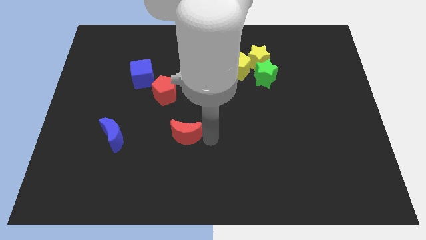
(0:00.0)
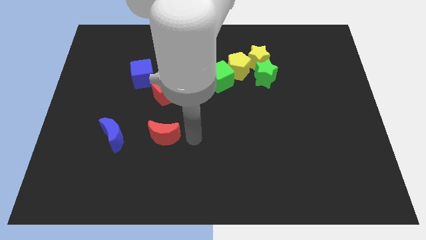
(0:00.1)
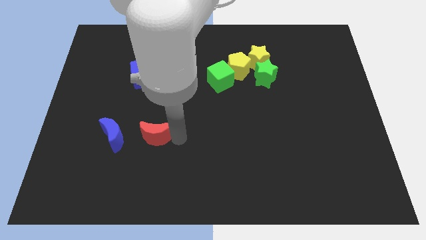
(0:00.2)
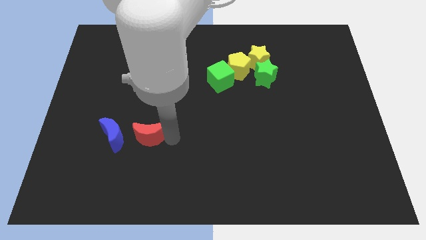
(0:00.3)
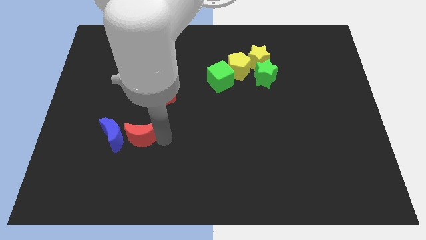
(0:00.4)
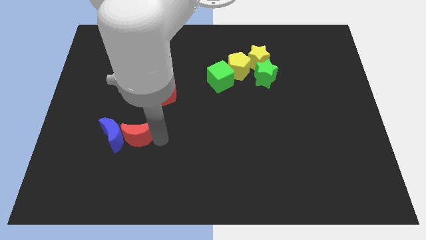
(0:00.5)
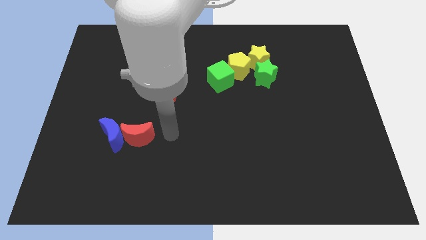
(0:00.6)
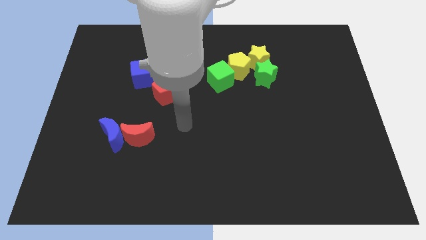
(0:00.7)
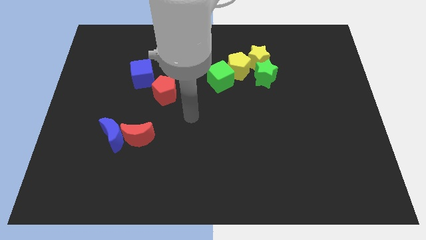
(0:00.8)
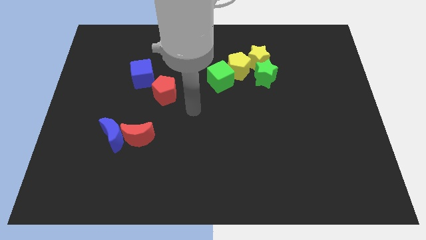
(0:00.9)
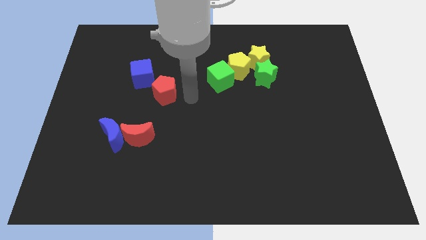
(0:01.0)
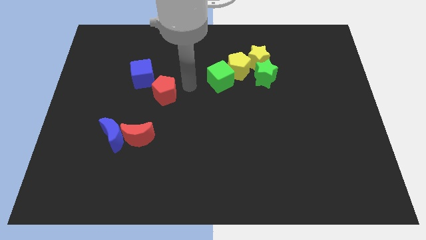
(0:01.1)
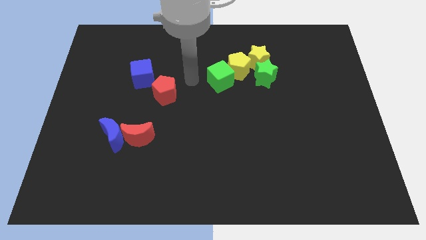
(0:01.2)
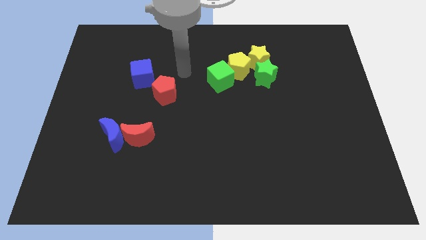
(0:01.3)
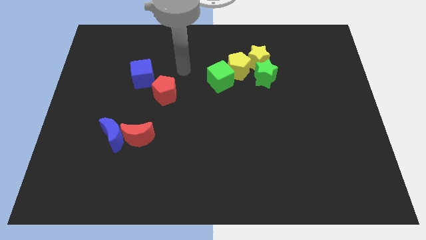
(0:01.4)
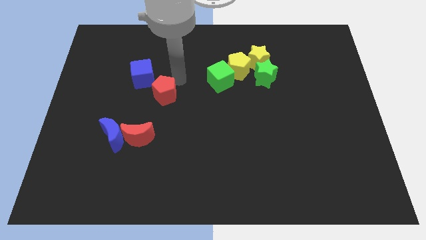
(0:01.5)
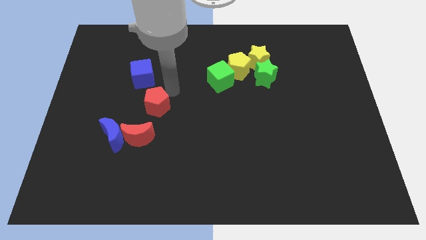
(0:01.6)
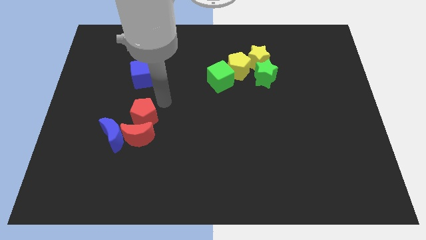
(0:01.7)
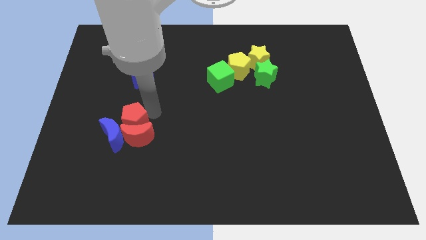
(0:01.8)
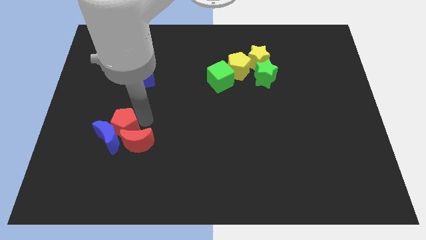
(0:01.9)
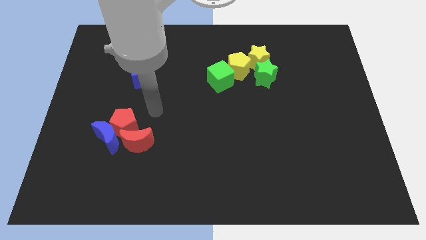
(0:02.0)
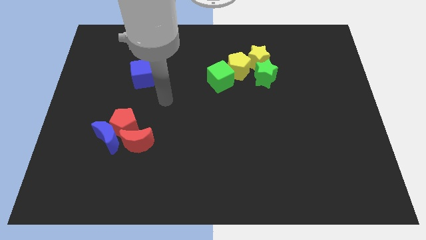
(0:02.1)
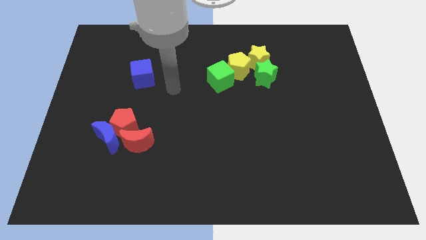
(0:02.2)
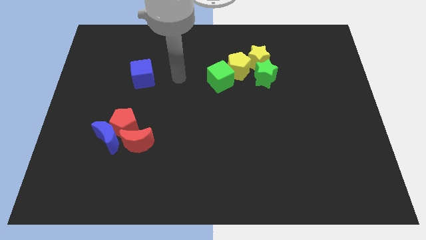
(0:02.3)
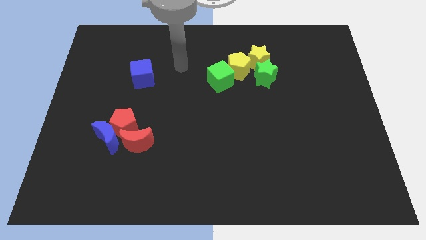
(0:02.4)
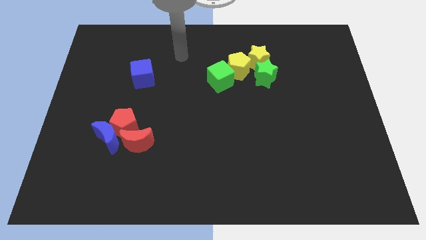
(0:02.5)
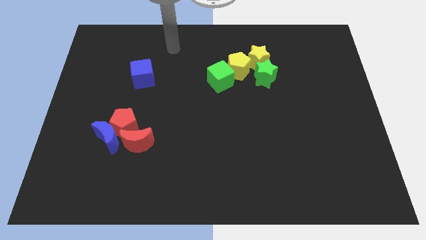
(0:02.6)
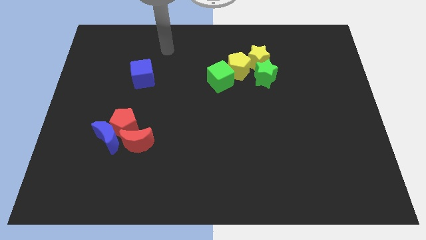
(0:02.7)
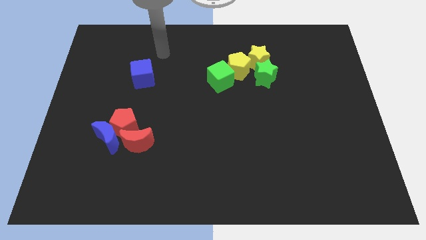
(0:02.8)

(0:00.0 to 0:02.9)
push the red color blocks into the blue moon

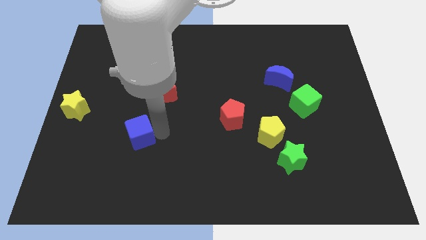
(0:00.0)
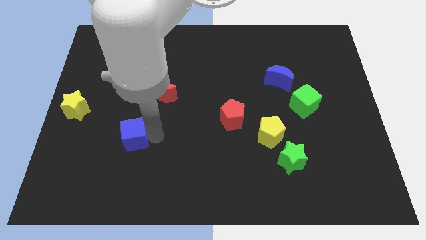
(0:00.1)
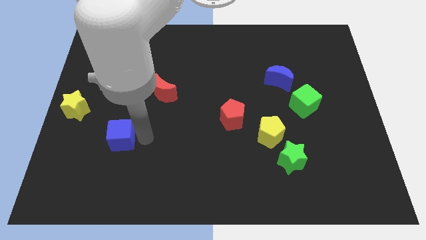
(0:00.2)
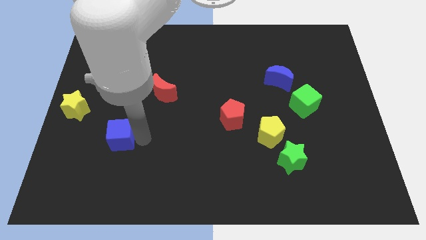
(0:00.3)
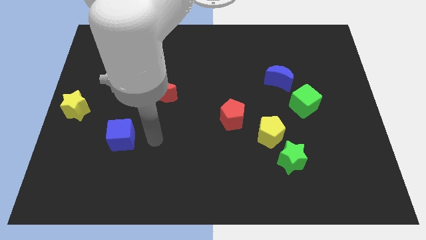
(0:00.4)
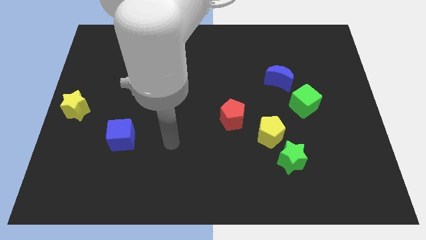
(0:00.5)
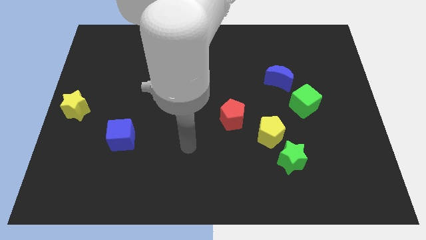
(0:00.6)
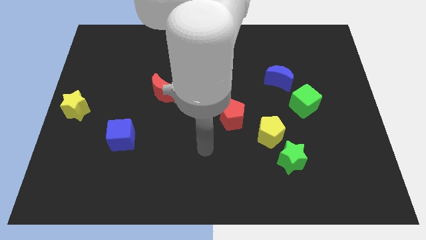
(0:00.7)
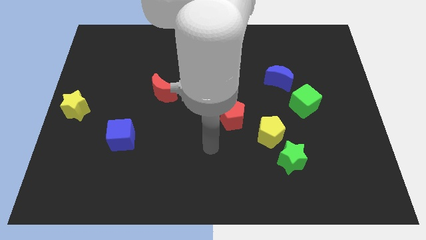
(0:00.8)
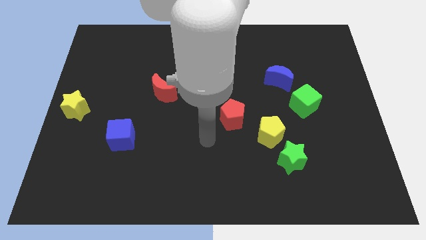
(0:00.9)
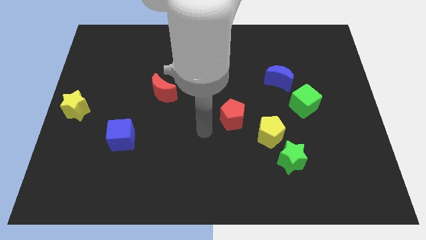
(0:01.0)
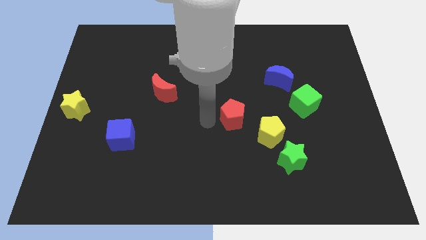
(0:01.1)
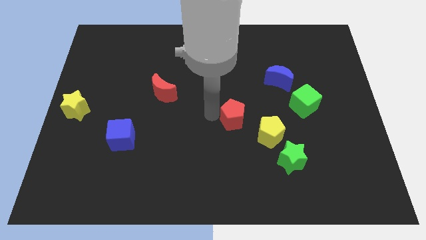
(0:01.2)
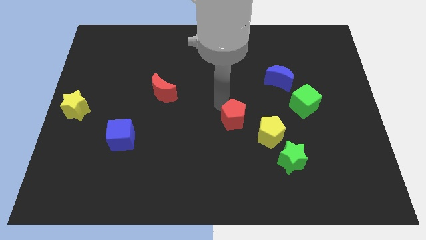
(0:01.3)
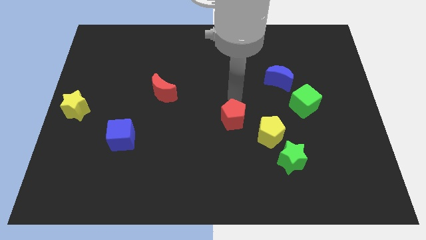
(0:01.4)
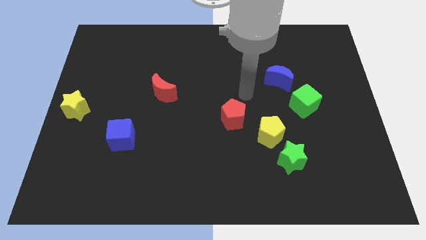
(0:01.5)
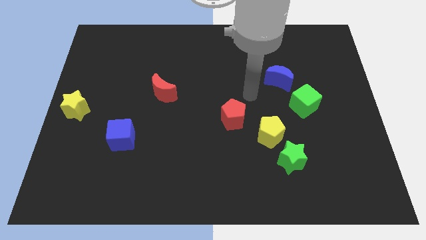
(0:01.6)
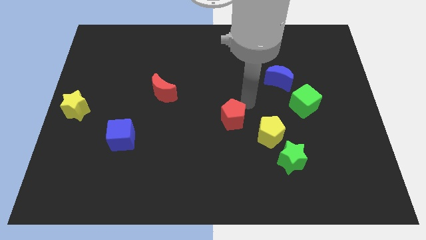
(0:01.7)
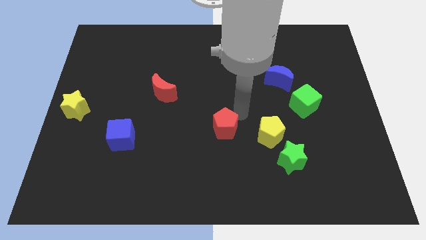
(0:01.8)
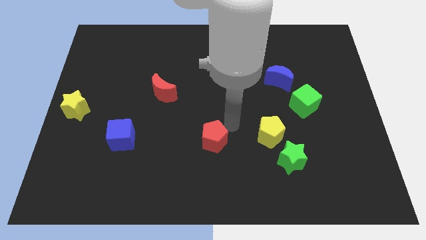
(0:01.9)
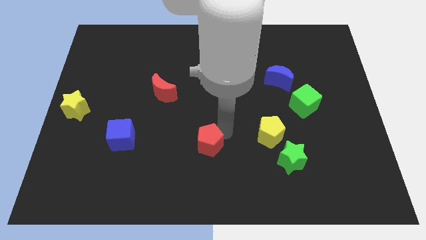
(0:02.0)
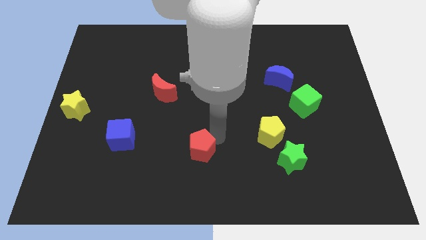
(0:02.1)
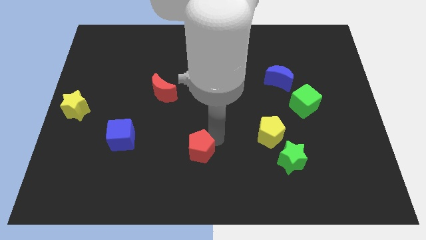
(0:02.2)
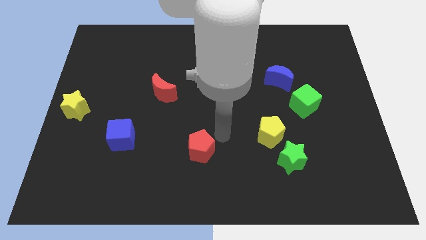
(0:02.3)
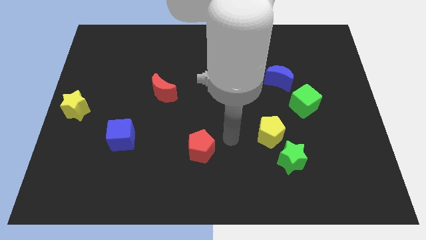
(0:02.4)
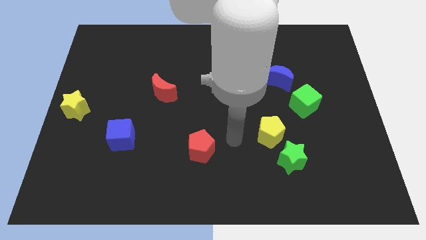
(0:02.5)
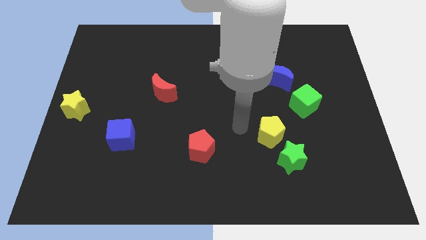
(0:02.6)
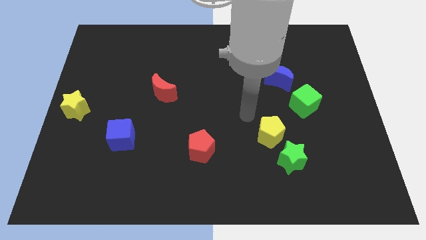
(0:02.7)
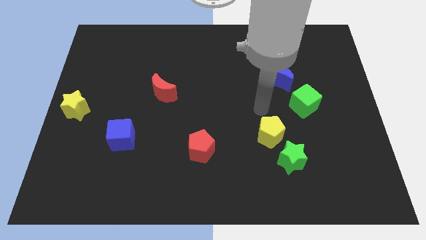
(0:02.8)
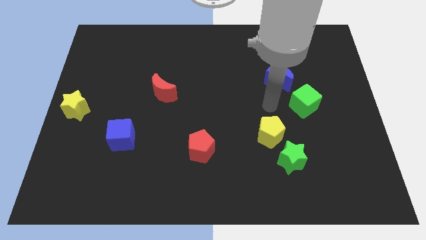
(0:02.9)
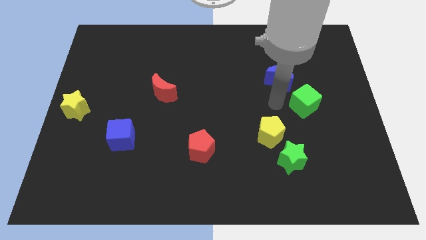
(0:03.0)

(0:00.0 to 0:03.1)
move your arm away from the blue cube

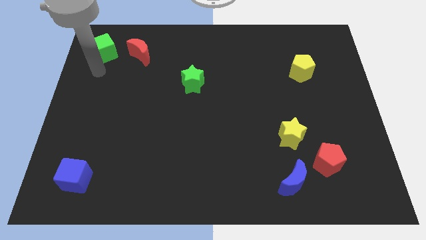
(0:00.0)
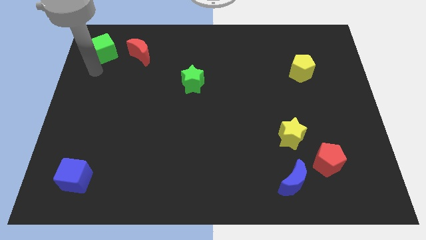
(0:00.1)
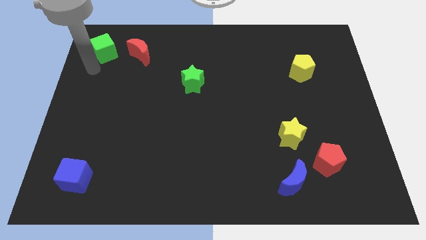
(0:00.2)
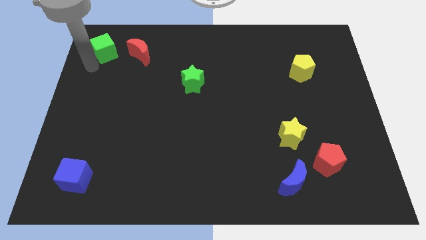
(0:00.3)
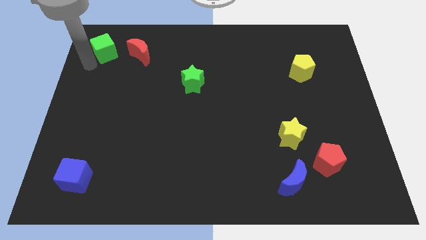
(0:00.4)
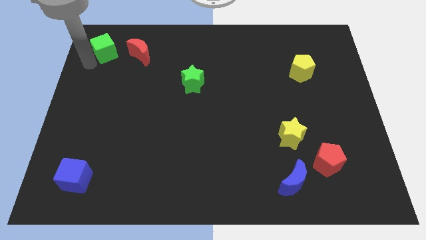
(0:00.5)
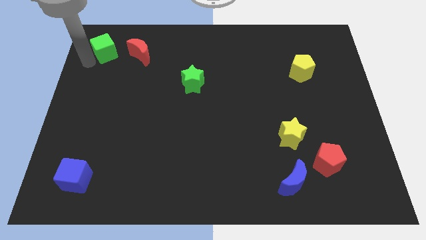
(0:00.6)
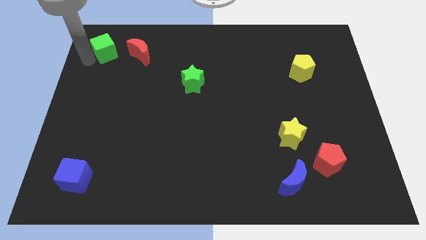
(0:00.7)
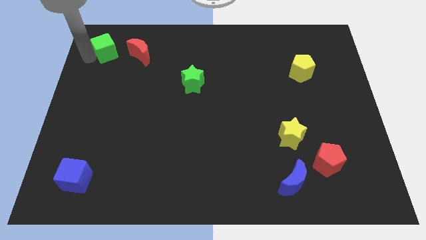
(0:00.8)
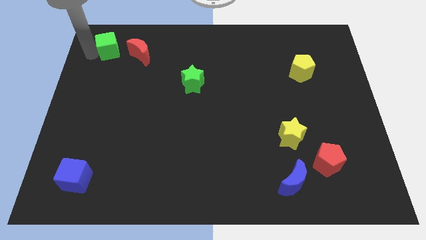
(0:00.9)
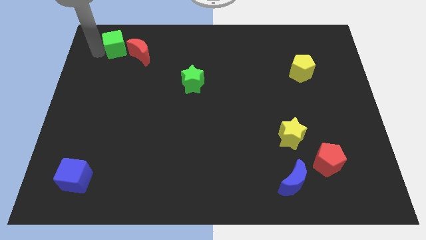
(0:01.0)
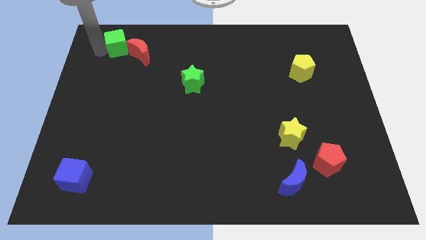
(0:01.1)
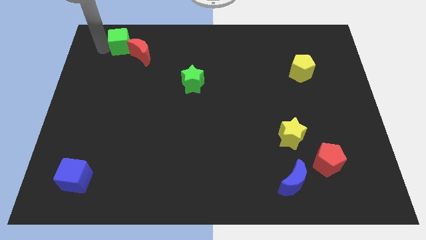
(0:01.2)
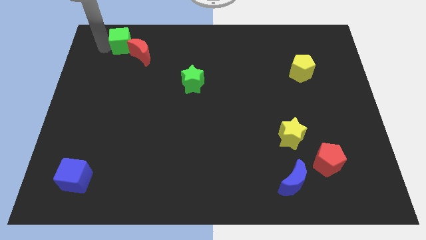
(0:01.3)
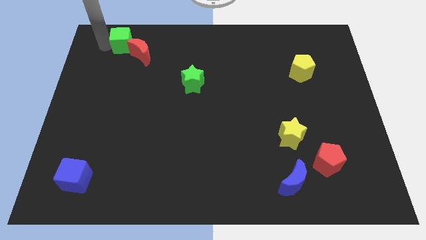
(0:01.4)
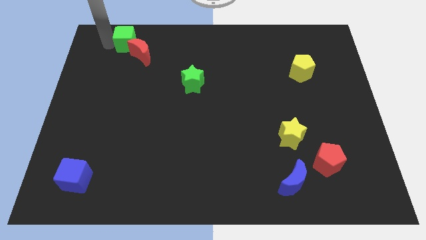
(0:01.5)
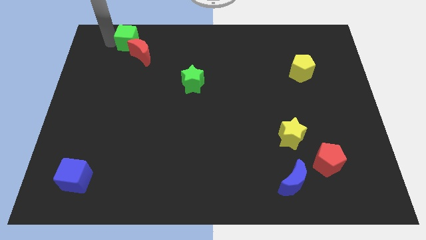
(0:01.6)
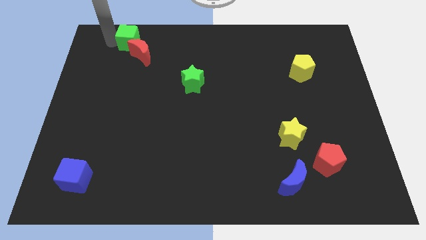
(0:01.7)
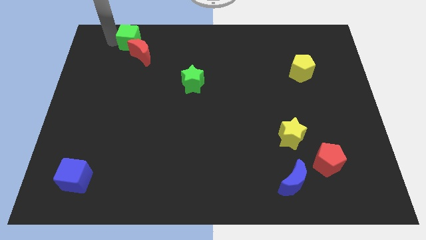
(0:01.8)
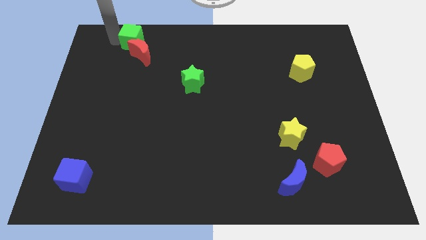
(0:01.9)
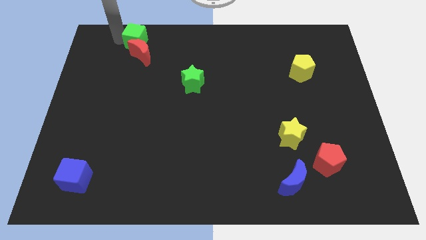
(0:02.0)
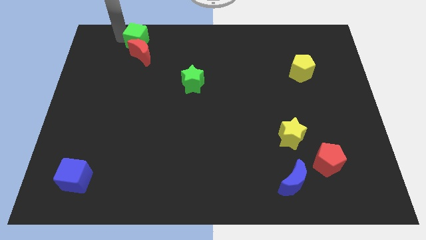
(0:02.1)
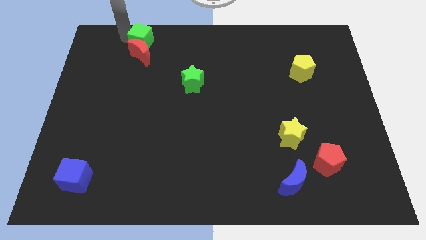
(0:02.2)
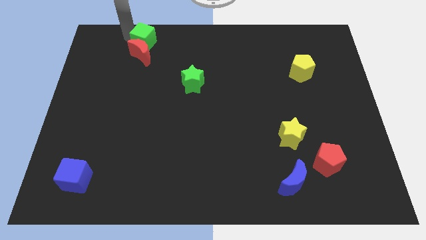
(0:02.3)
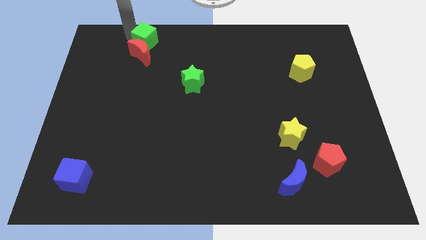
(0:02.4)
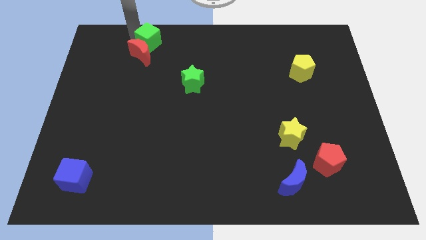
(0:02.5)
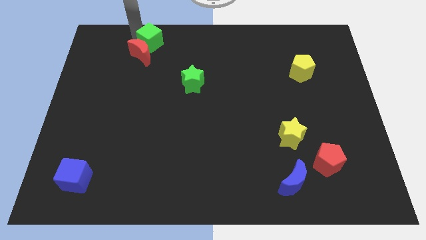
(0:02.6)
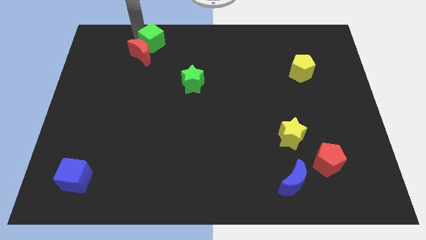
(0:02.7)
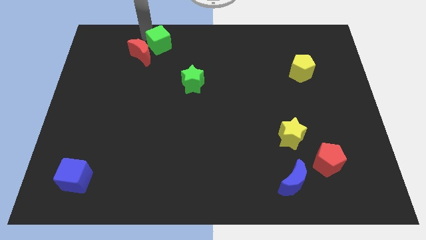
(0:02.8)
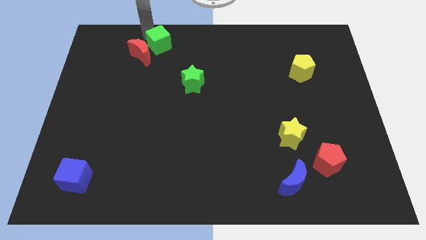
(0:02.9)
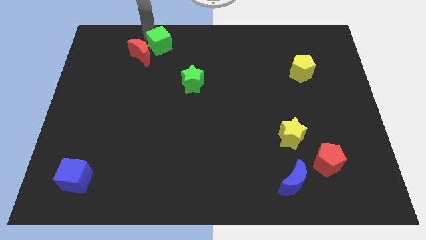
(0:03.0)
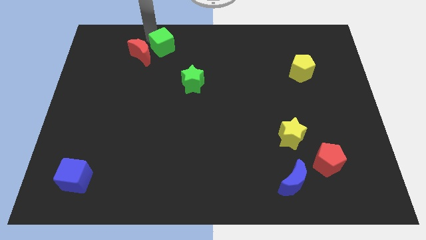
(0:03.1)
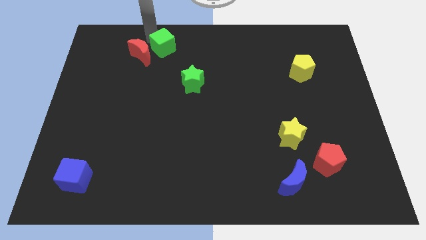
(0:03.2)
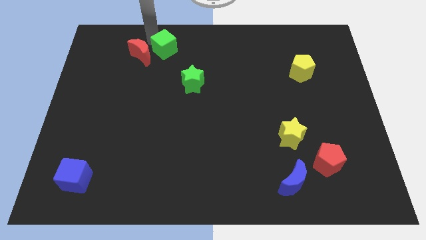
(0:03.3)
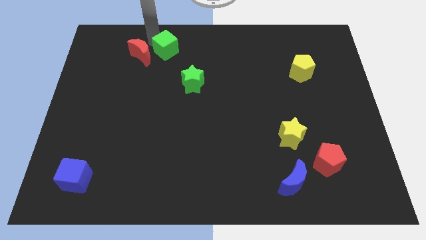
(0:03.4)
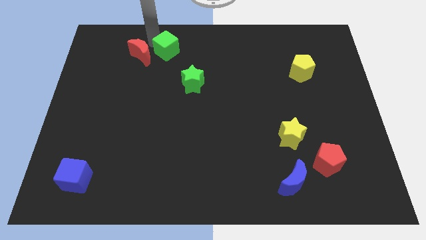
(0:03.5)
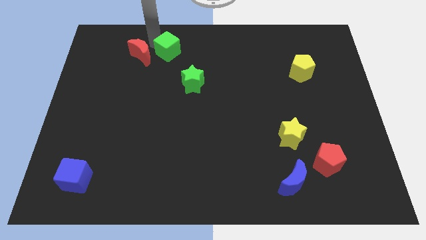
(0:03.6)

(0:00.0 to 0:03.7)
move the green cube right to the red moon
